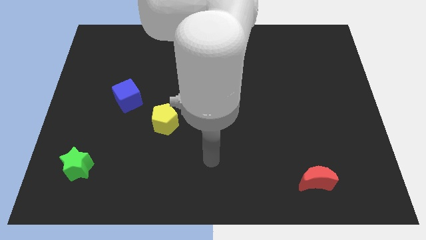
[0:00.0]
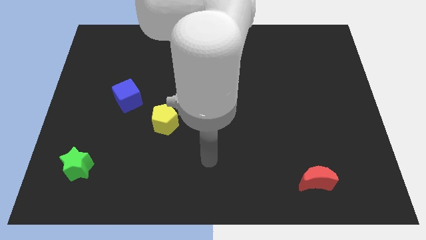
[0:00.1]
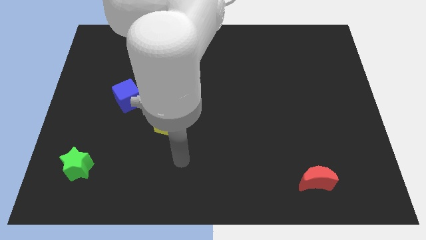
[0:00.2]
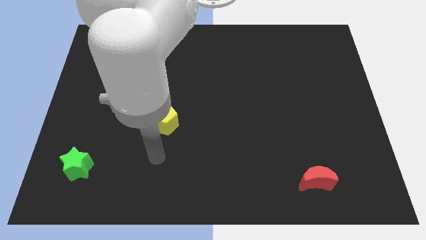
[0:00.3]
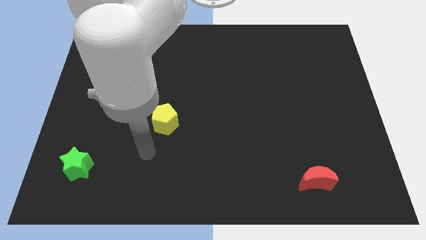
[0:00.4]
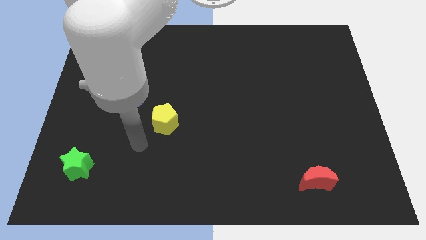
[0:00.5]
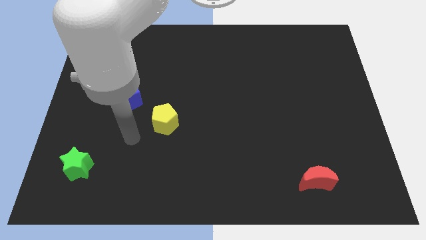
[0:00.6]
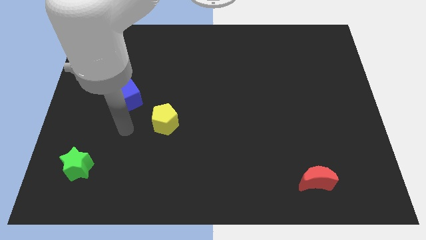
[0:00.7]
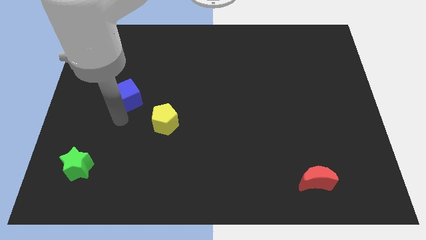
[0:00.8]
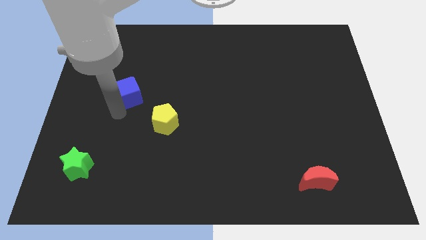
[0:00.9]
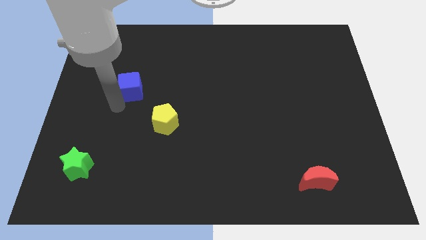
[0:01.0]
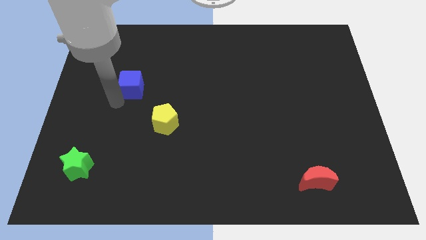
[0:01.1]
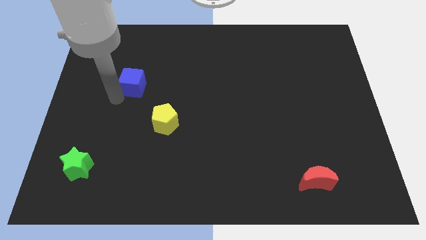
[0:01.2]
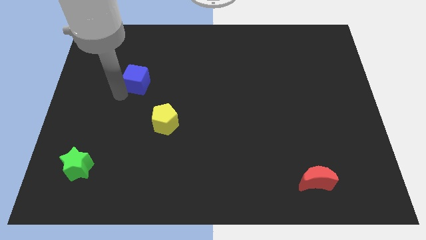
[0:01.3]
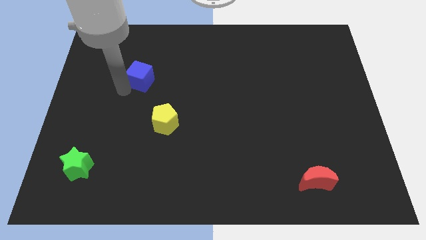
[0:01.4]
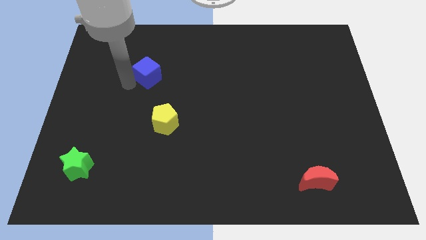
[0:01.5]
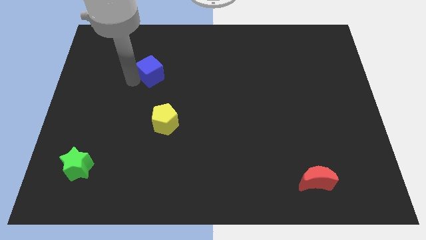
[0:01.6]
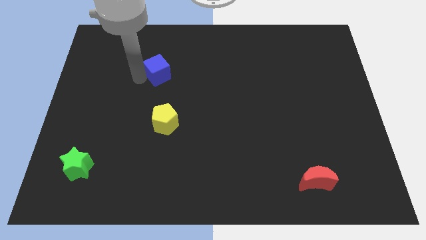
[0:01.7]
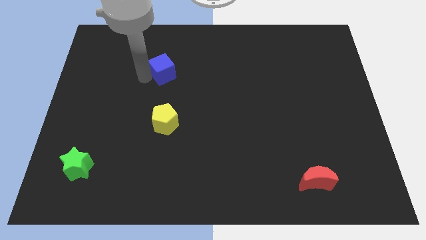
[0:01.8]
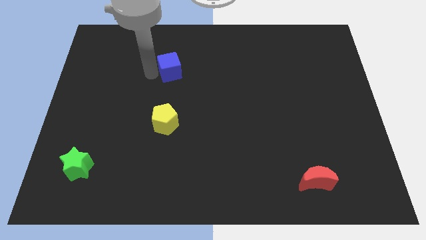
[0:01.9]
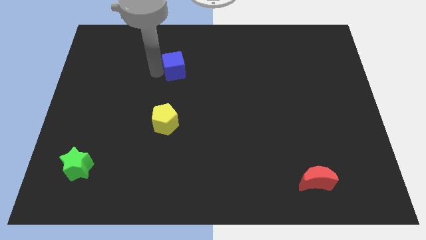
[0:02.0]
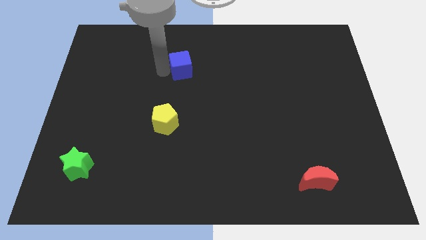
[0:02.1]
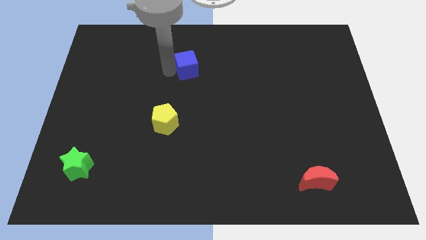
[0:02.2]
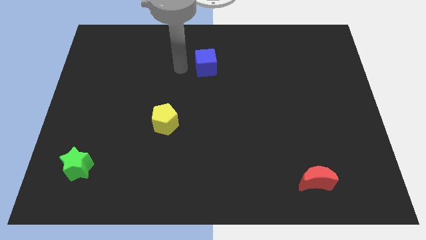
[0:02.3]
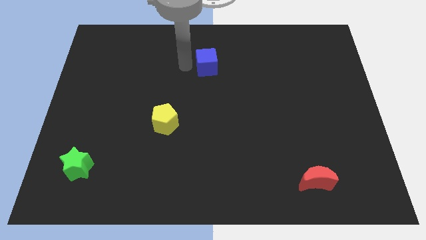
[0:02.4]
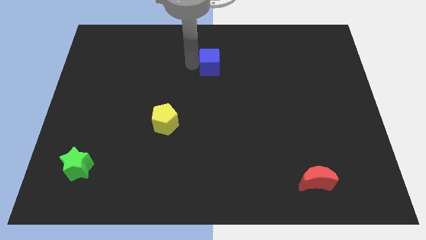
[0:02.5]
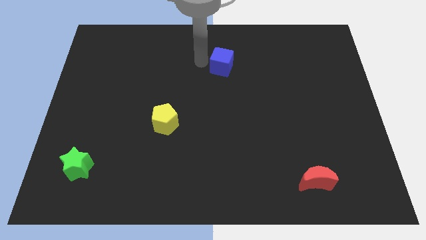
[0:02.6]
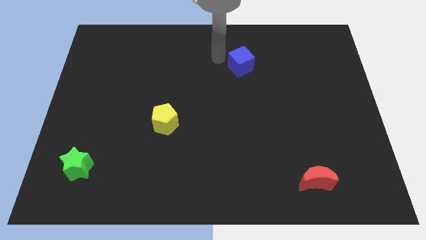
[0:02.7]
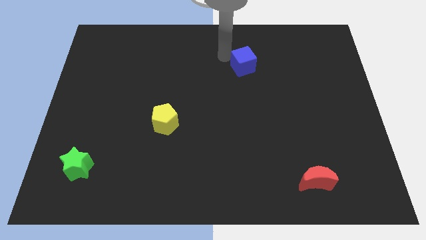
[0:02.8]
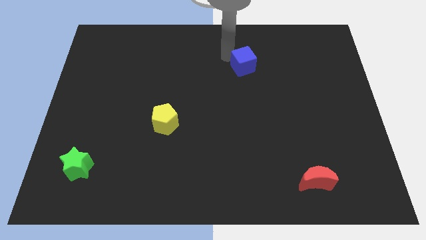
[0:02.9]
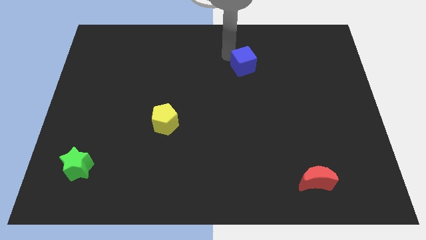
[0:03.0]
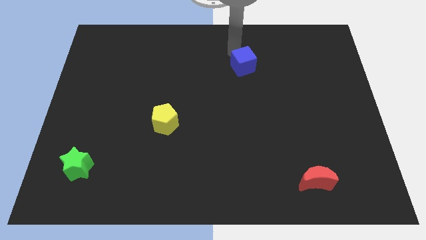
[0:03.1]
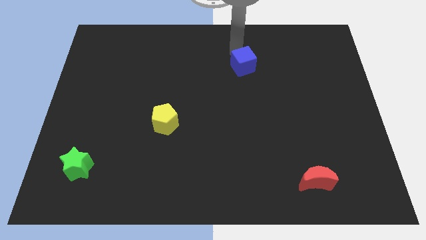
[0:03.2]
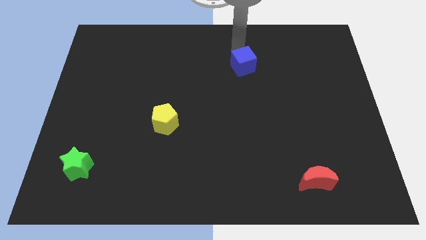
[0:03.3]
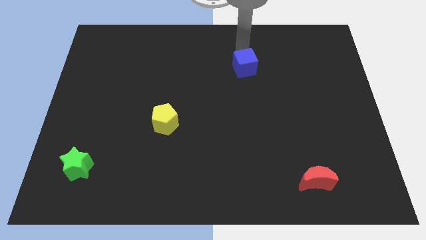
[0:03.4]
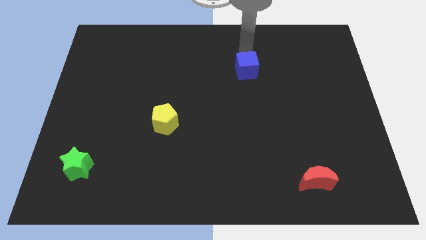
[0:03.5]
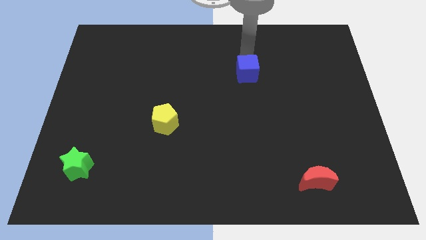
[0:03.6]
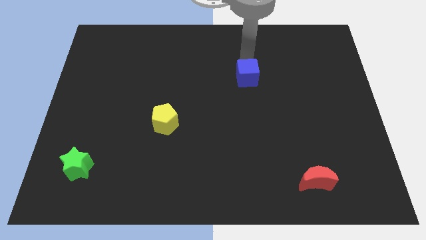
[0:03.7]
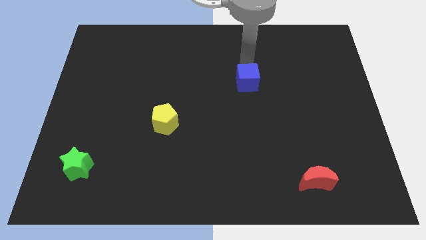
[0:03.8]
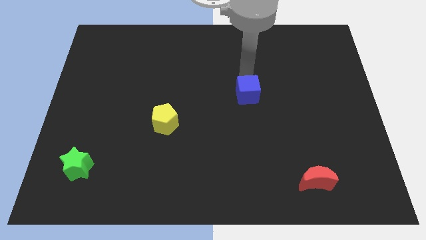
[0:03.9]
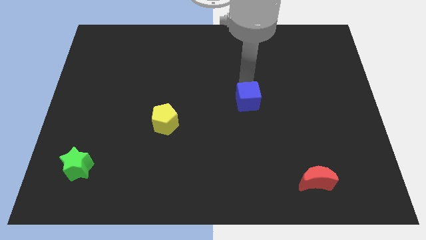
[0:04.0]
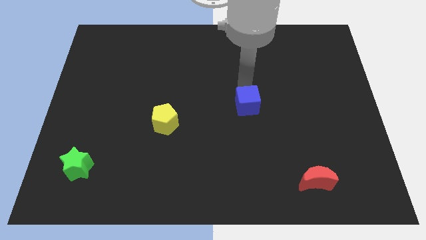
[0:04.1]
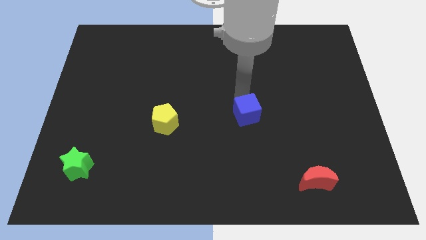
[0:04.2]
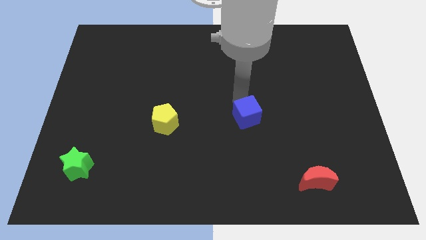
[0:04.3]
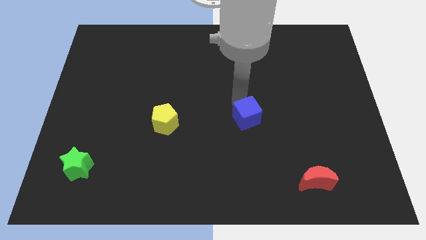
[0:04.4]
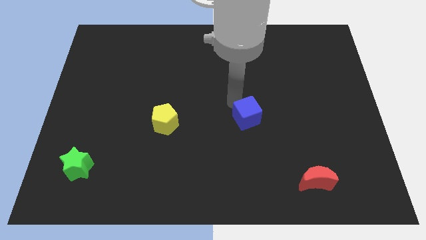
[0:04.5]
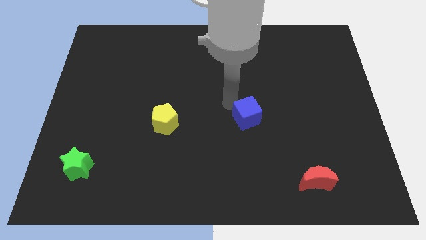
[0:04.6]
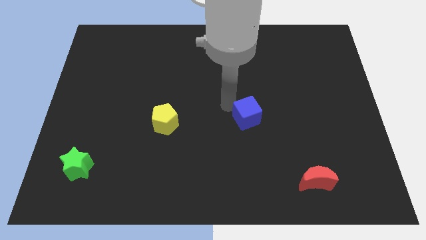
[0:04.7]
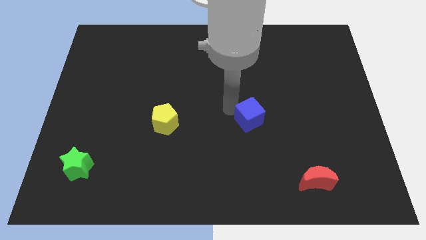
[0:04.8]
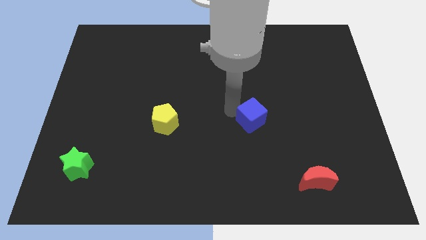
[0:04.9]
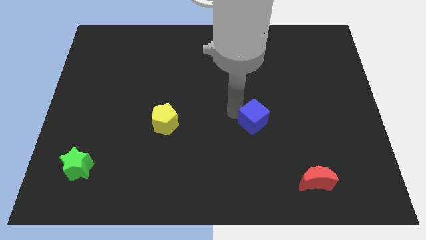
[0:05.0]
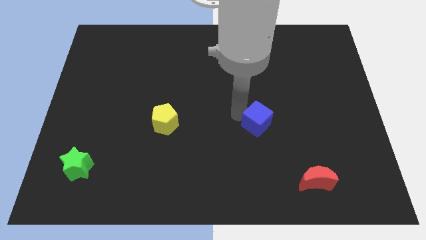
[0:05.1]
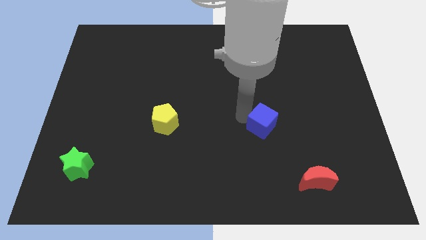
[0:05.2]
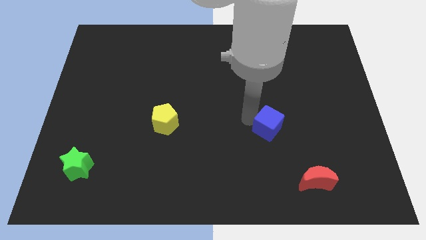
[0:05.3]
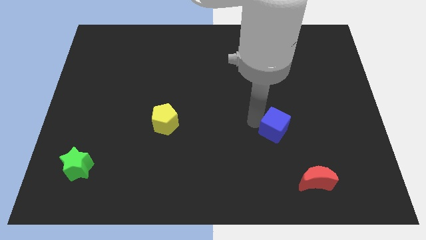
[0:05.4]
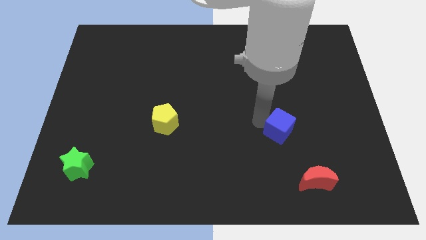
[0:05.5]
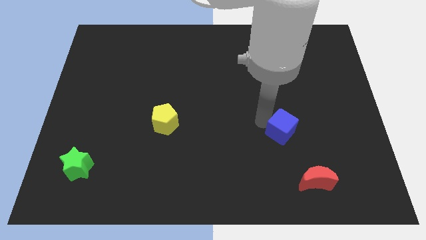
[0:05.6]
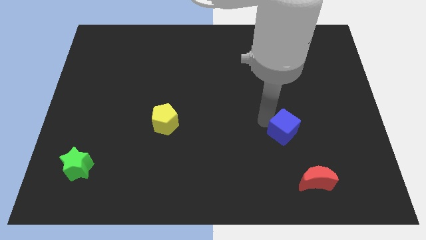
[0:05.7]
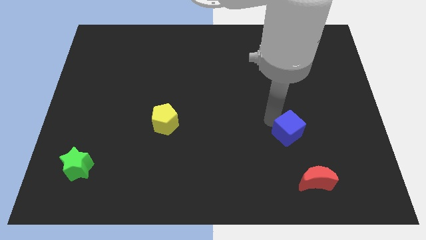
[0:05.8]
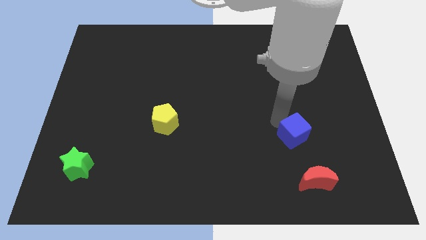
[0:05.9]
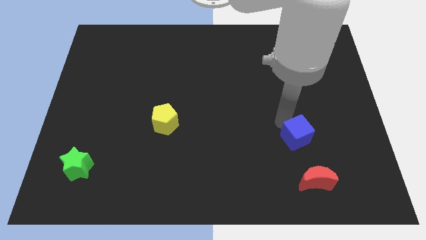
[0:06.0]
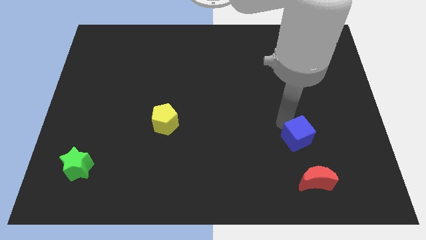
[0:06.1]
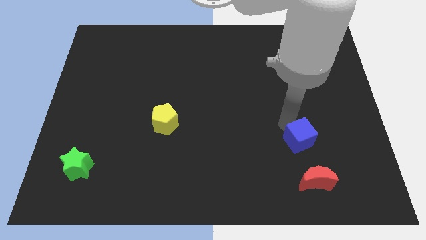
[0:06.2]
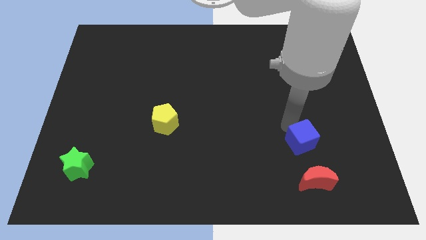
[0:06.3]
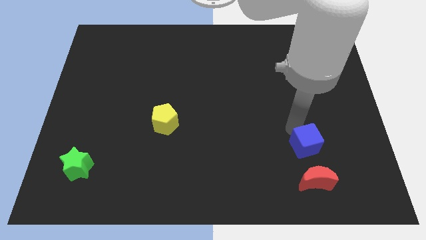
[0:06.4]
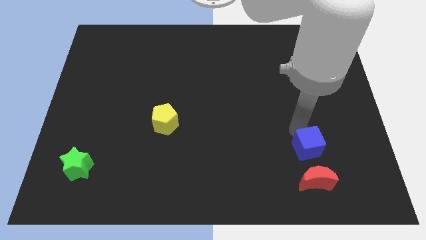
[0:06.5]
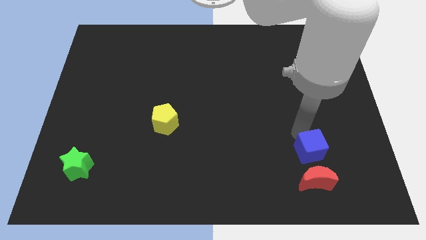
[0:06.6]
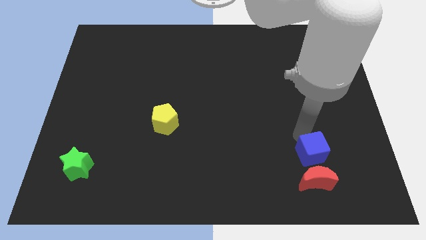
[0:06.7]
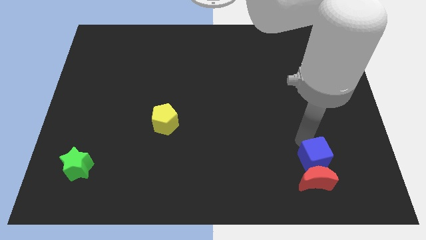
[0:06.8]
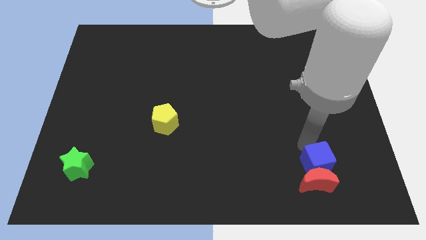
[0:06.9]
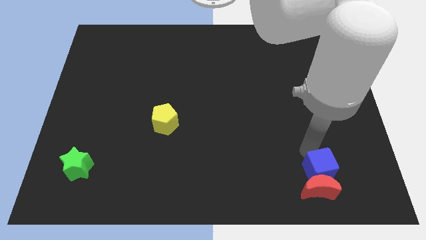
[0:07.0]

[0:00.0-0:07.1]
push the blue block close to the red moon

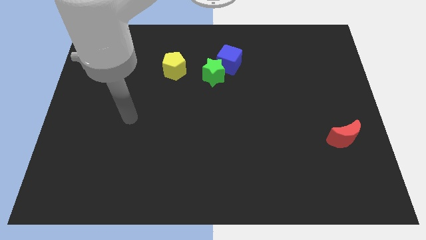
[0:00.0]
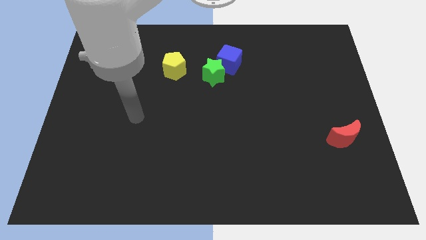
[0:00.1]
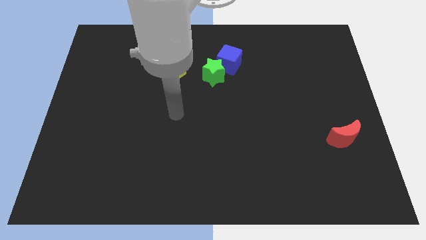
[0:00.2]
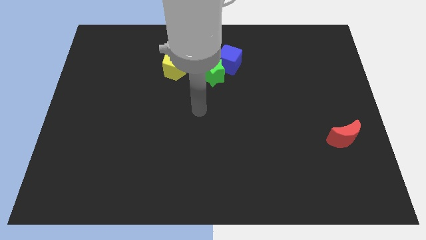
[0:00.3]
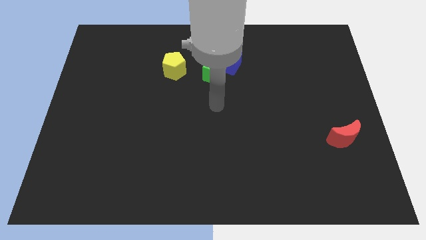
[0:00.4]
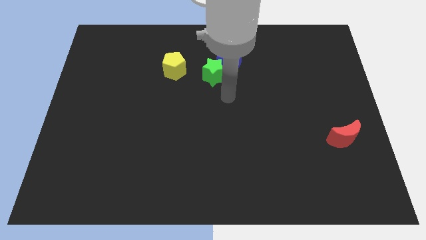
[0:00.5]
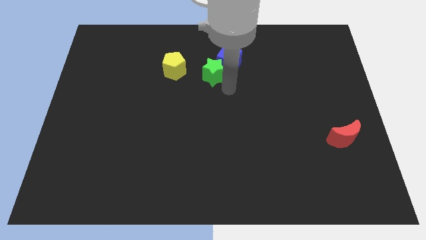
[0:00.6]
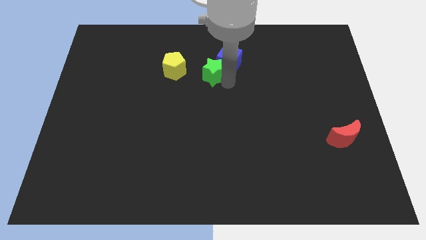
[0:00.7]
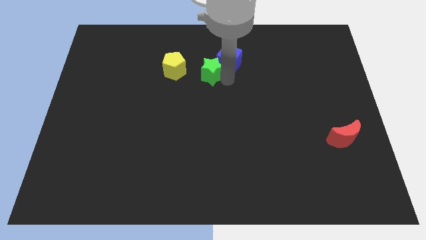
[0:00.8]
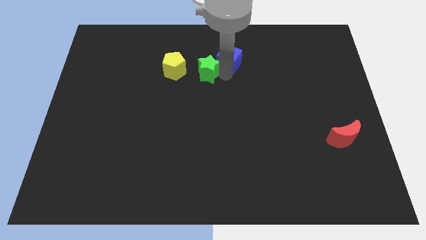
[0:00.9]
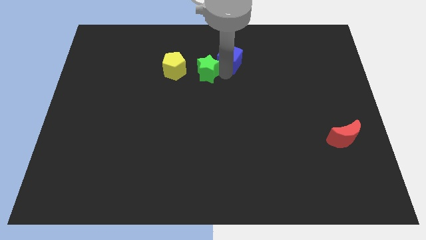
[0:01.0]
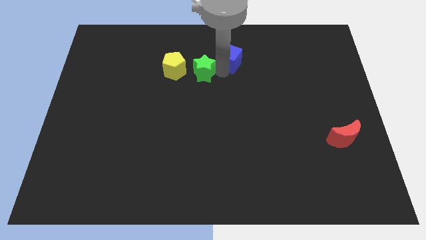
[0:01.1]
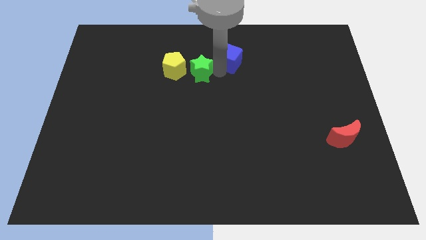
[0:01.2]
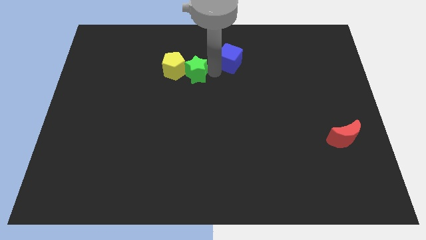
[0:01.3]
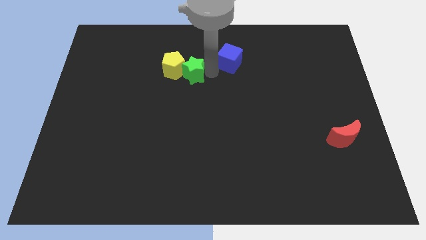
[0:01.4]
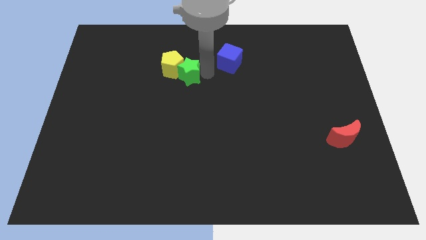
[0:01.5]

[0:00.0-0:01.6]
slide the star to the pentagon
